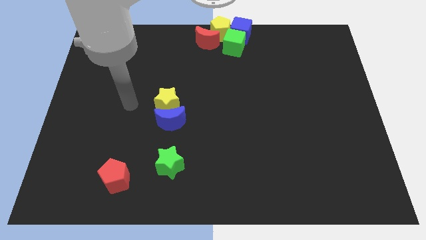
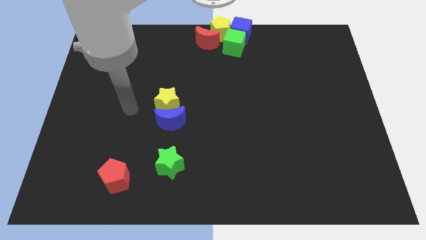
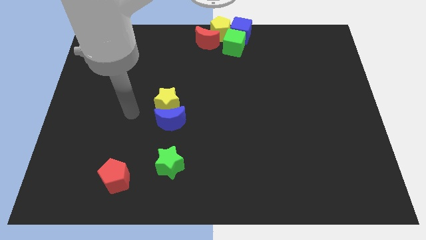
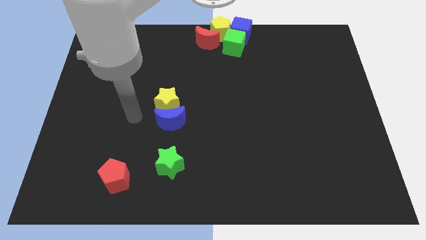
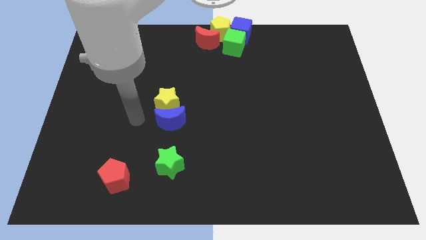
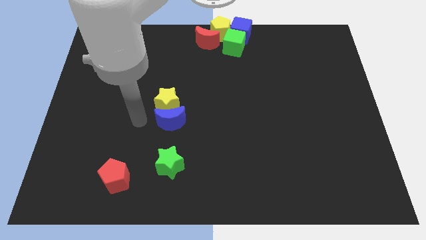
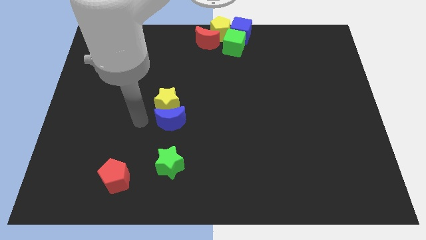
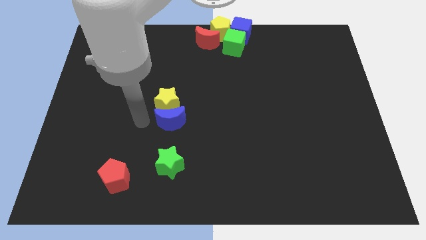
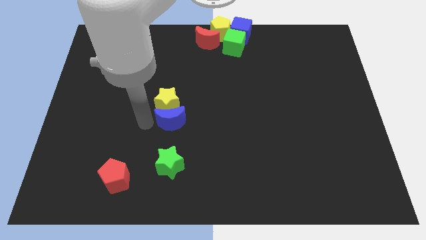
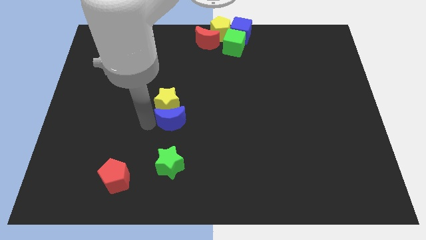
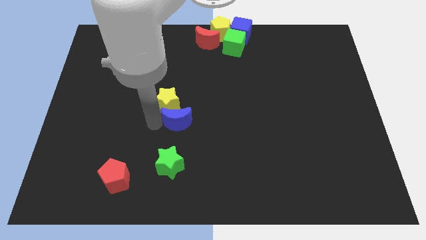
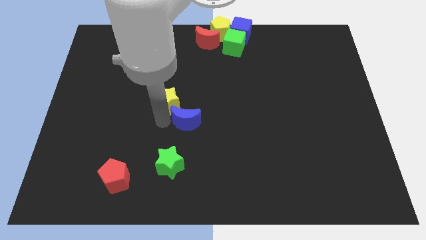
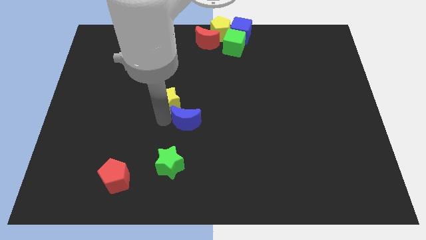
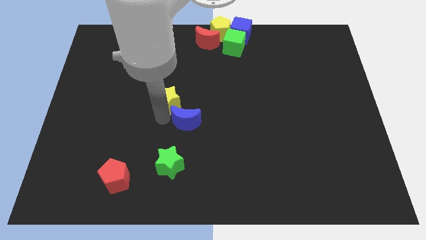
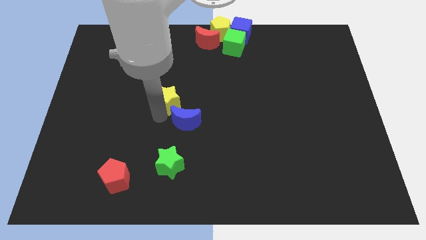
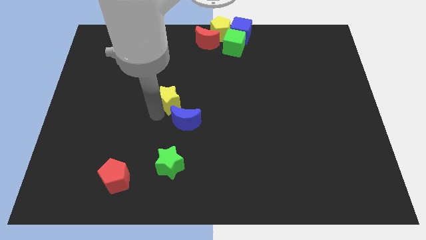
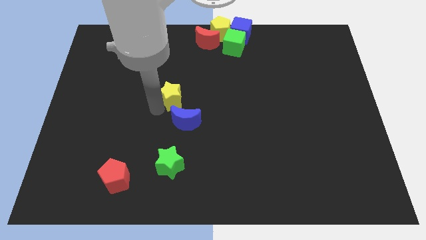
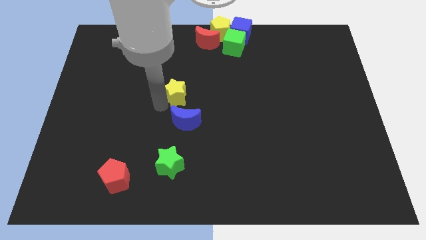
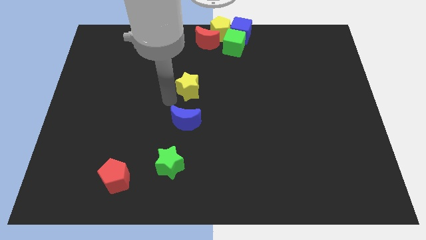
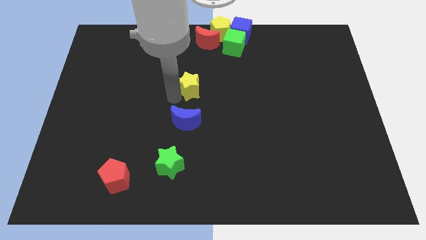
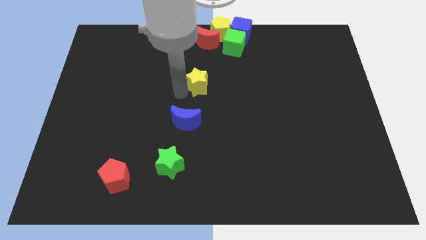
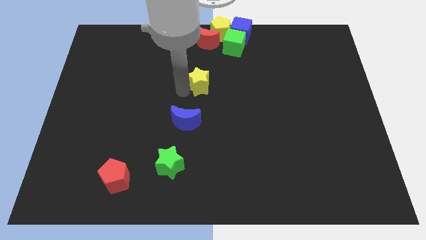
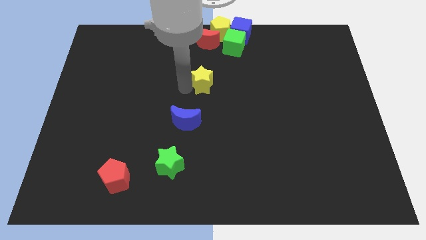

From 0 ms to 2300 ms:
separate the yellow star and blue moon

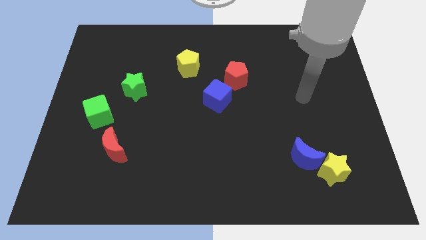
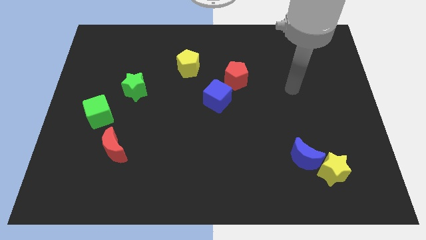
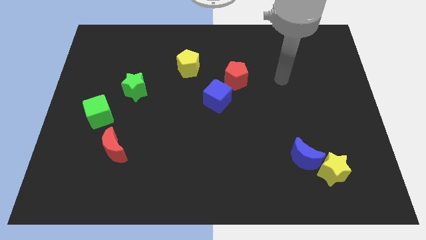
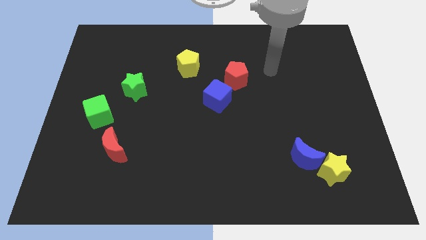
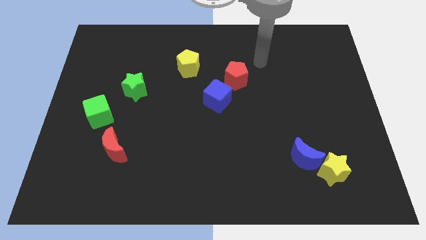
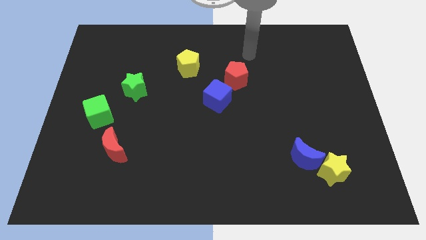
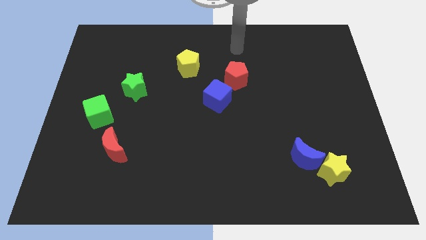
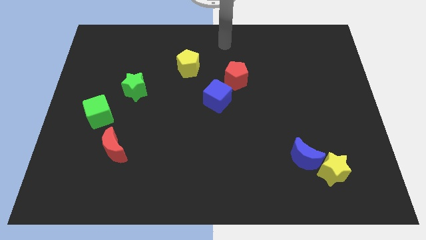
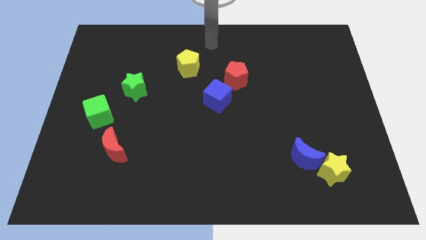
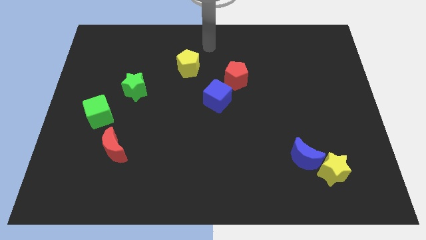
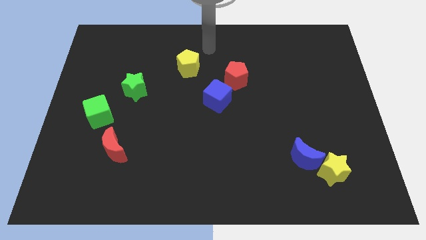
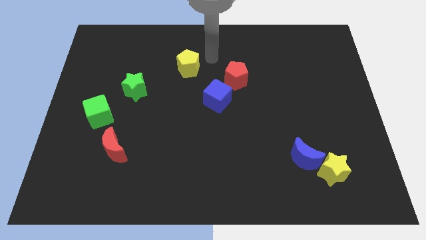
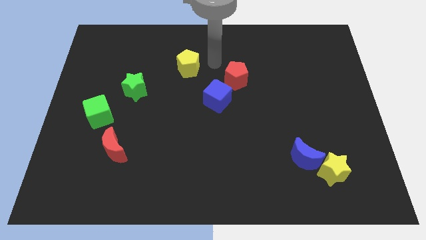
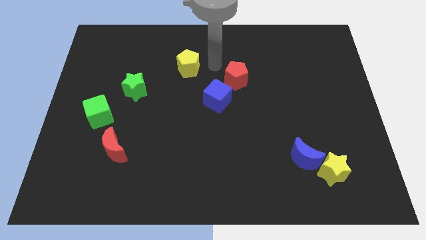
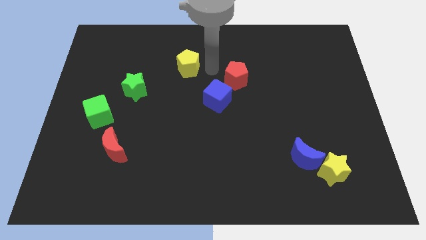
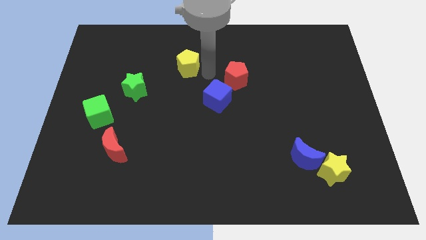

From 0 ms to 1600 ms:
move your arm in between the yellow pentagon and red pentagon

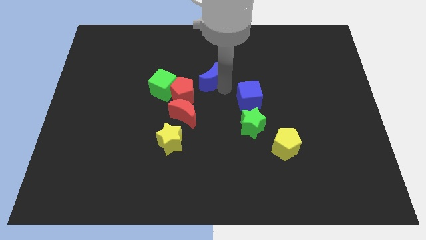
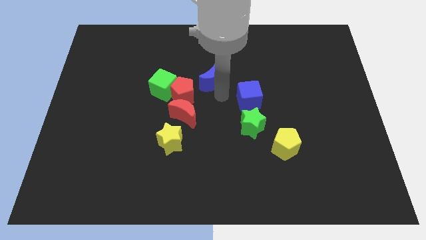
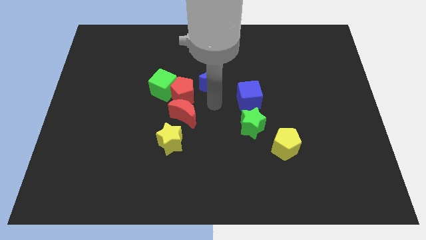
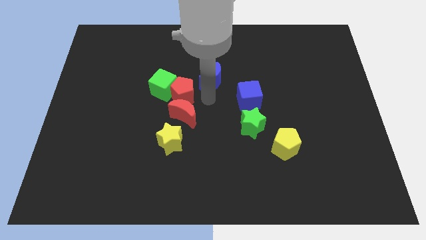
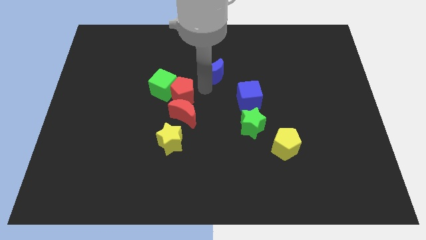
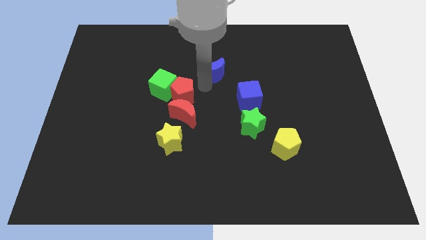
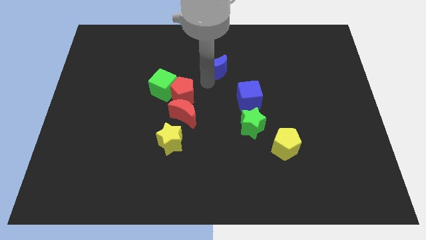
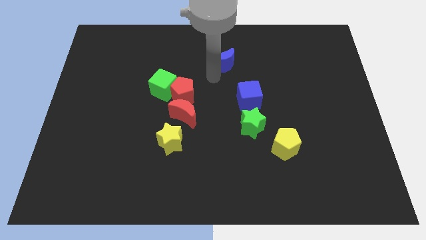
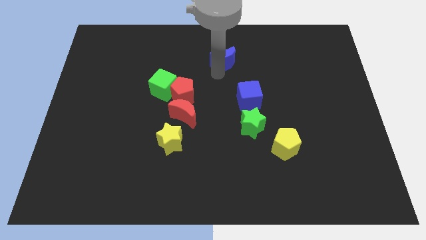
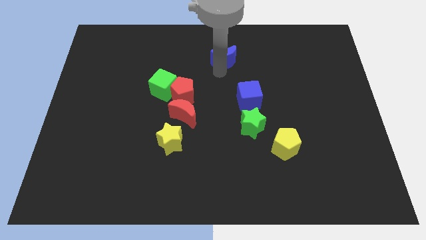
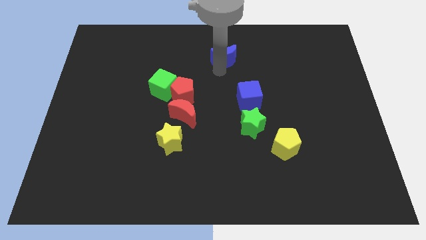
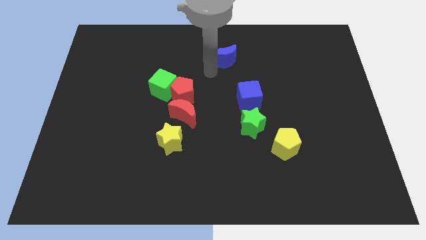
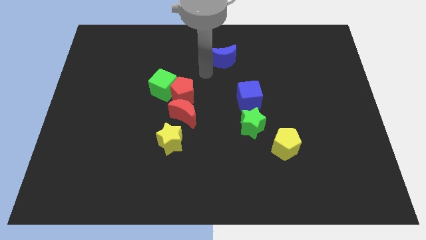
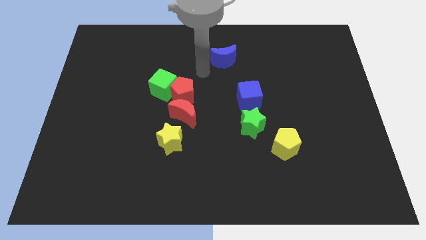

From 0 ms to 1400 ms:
move the blue moon towards the top center of the board

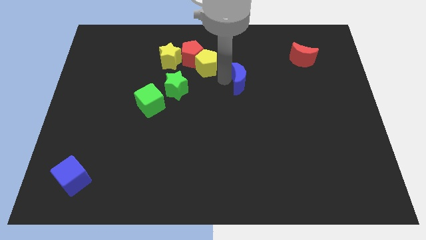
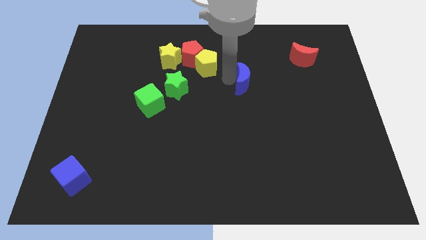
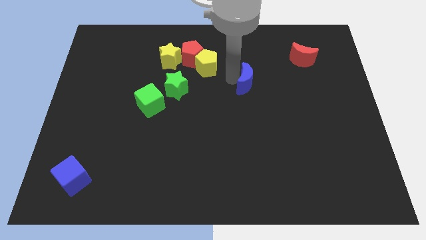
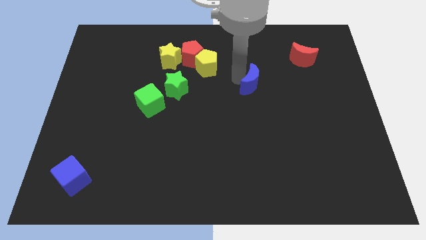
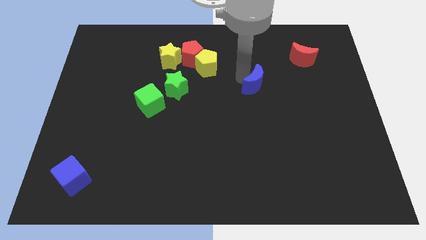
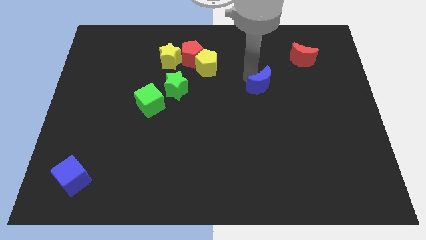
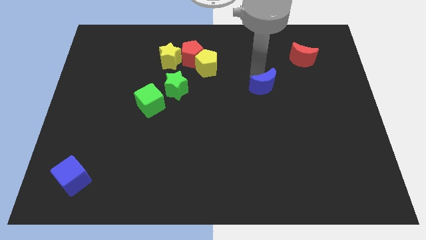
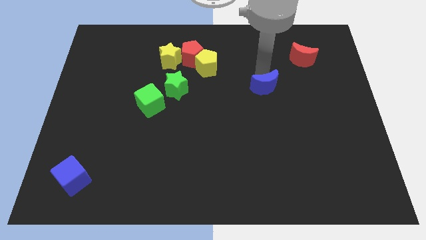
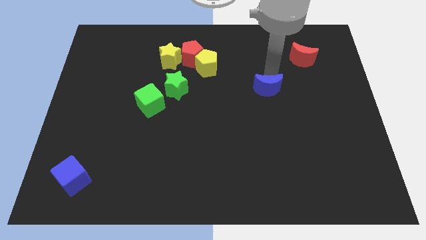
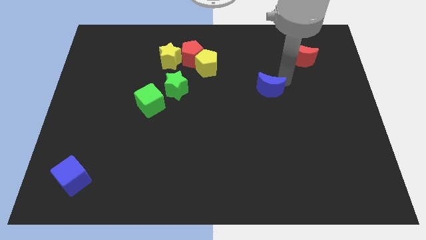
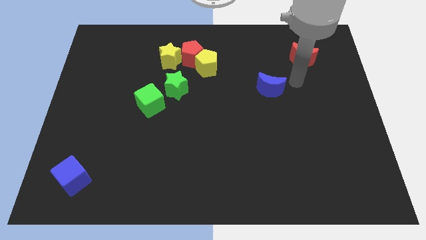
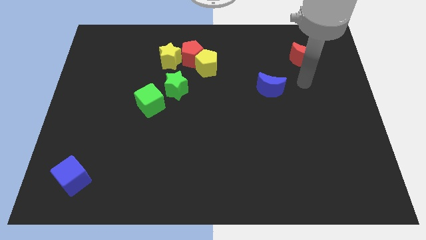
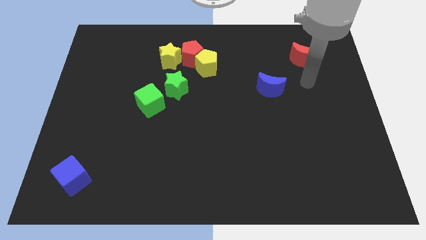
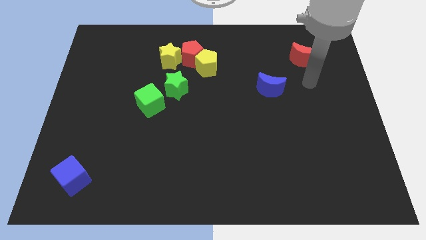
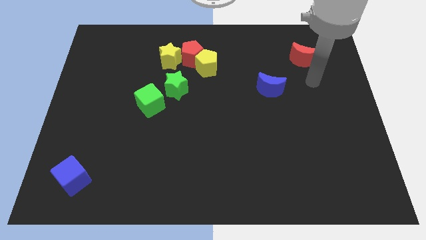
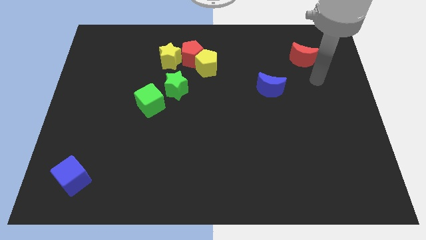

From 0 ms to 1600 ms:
place the blue moon parallel to the green star

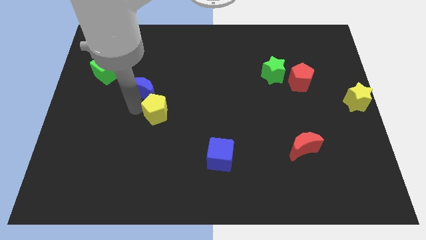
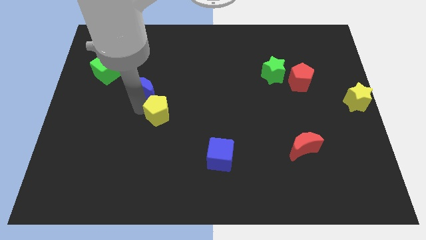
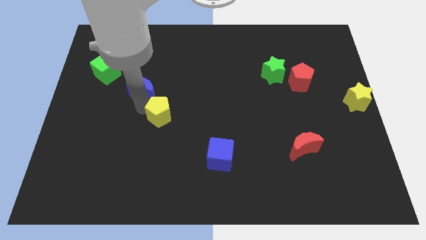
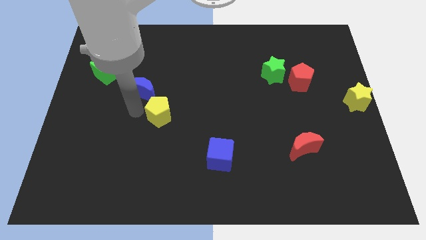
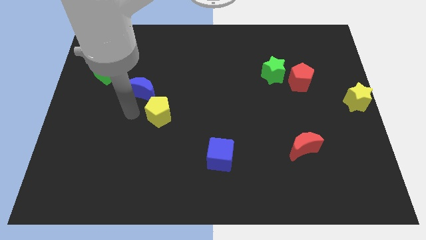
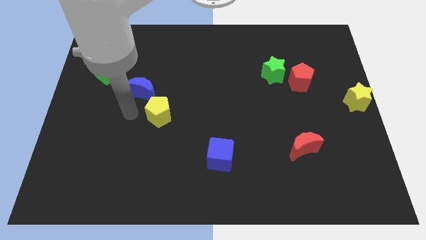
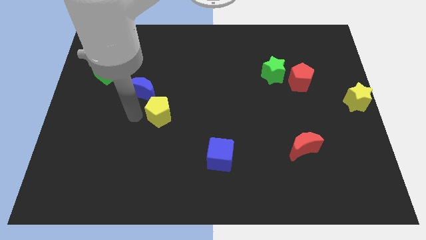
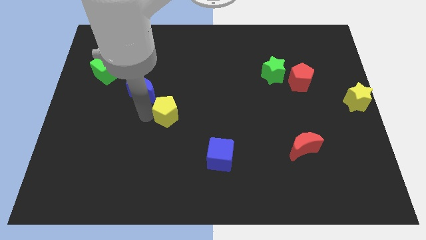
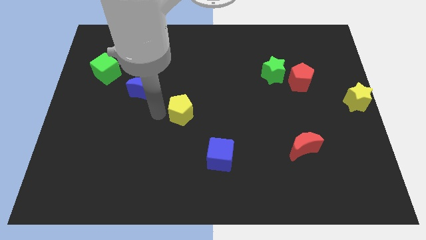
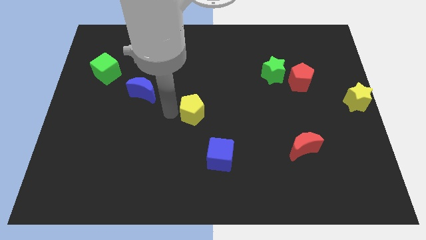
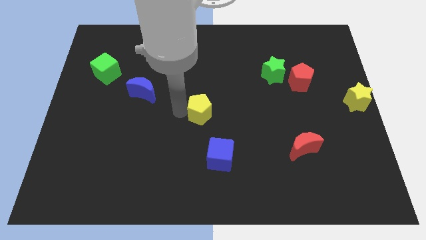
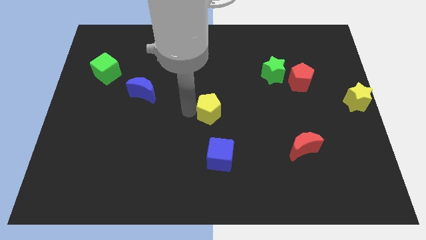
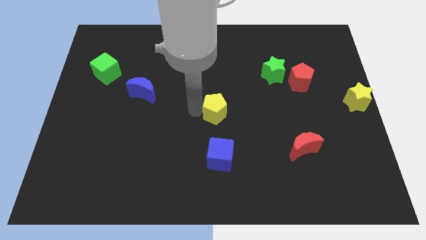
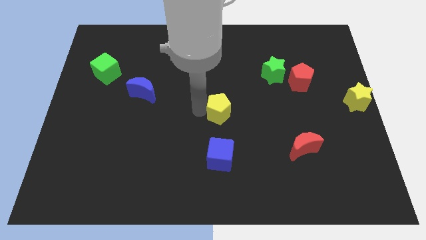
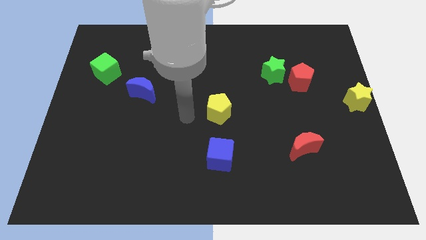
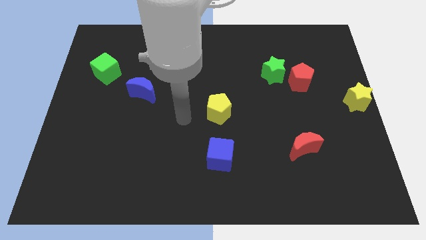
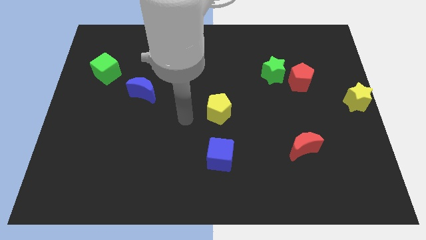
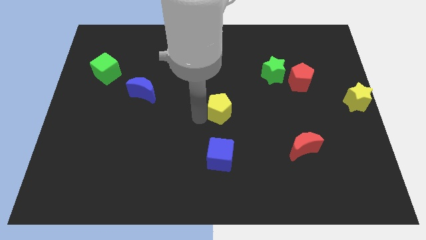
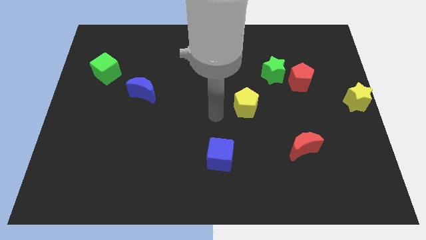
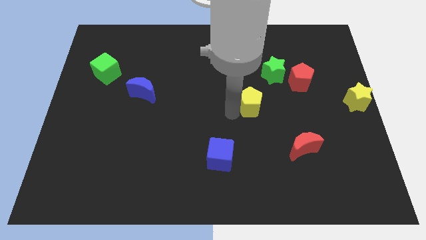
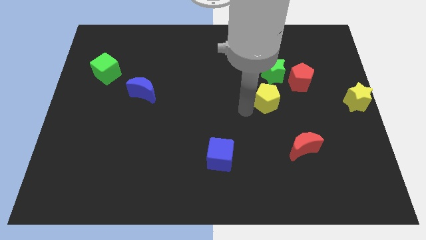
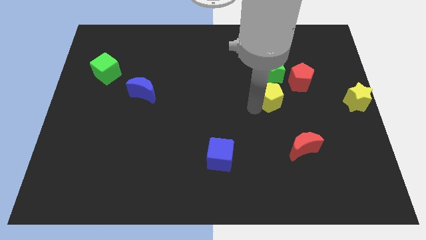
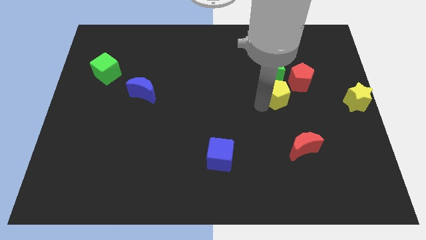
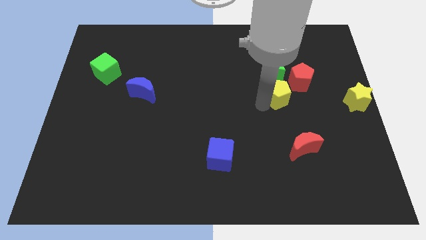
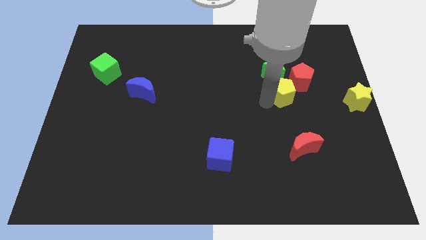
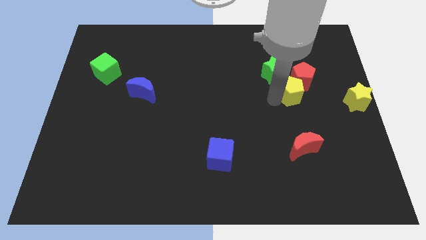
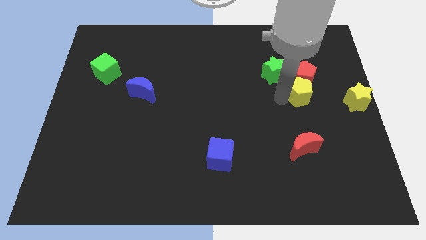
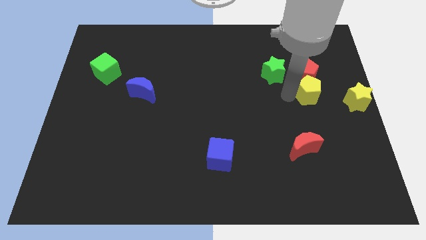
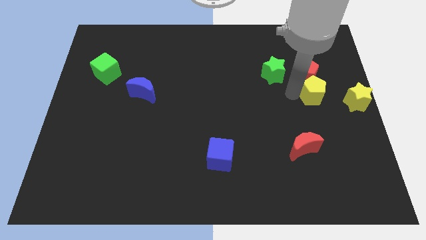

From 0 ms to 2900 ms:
push yellow pentagon in to red pentagon
